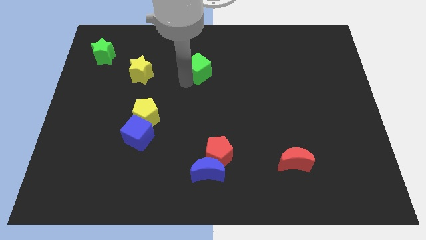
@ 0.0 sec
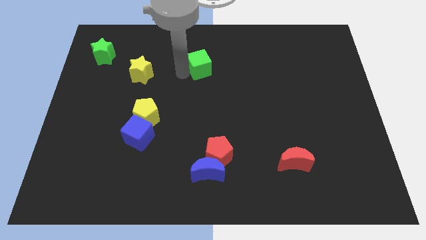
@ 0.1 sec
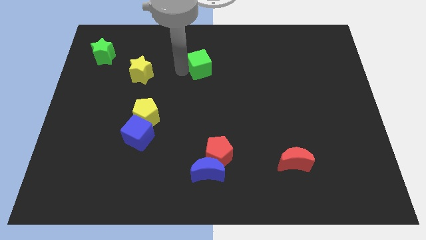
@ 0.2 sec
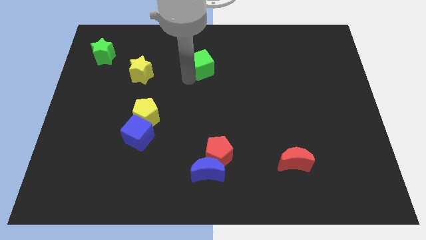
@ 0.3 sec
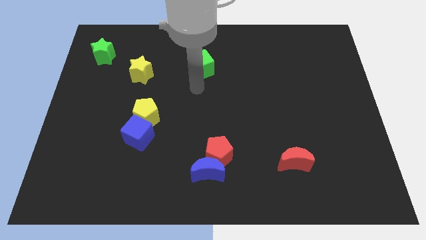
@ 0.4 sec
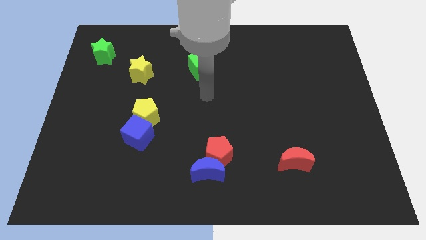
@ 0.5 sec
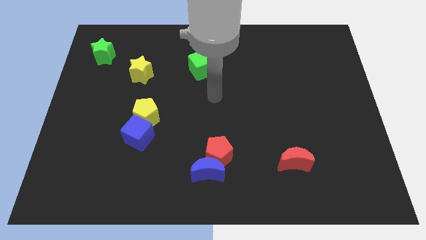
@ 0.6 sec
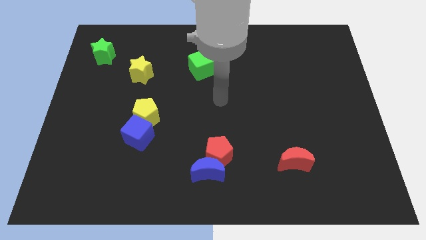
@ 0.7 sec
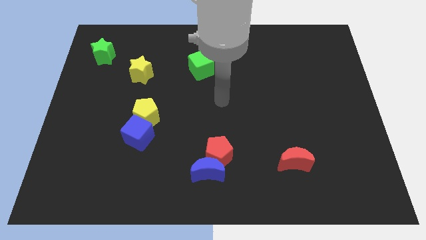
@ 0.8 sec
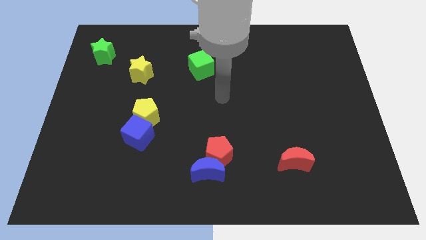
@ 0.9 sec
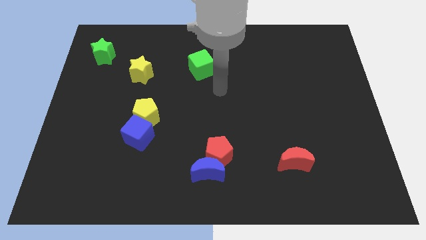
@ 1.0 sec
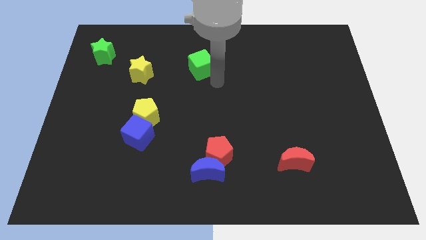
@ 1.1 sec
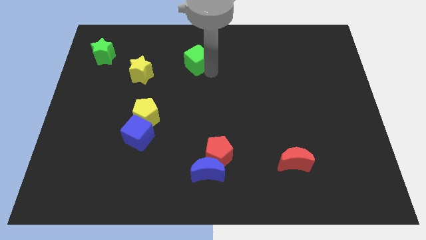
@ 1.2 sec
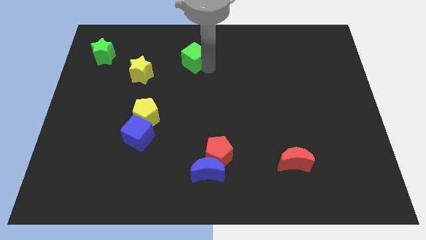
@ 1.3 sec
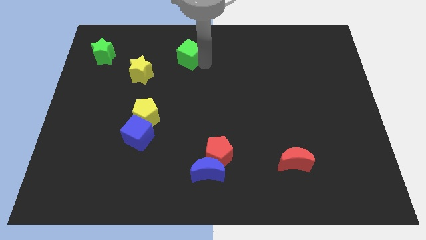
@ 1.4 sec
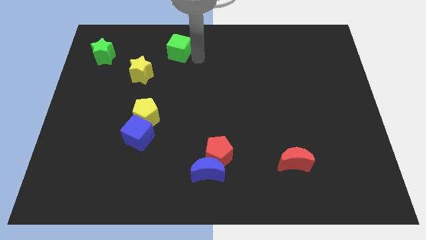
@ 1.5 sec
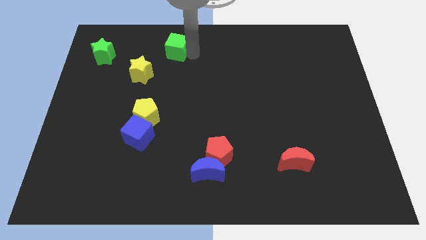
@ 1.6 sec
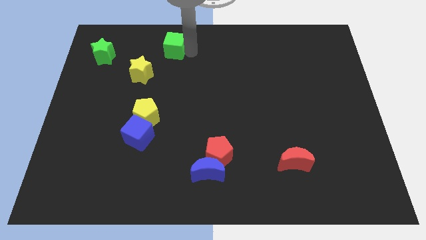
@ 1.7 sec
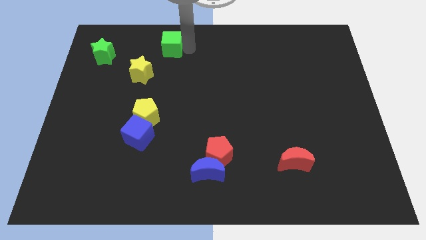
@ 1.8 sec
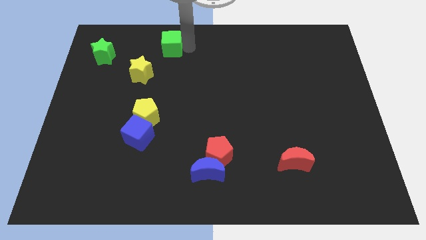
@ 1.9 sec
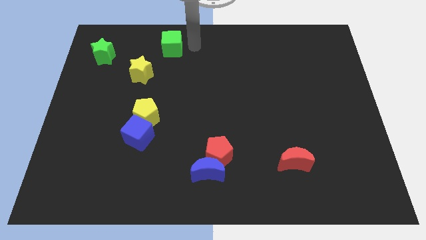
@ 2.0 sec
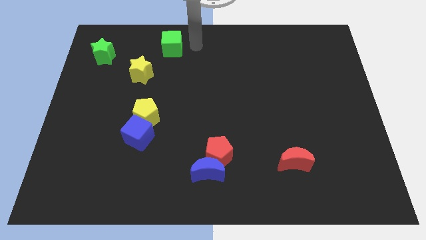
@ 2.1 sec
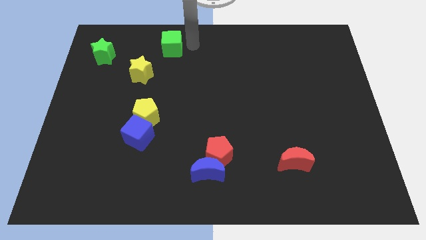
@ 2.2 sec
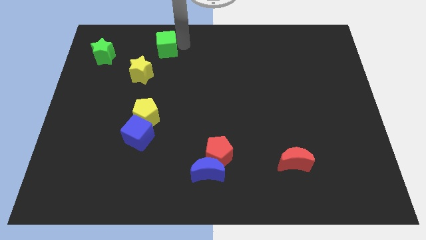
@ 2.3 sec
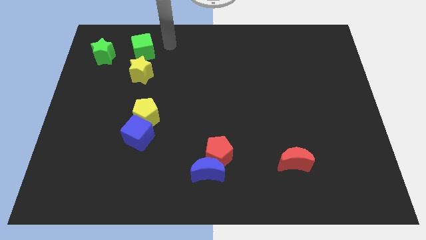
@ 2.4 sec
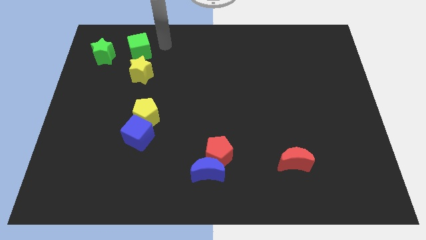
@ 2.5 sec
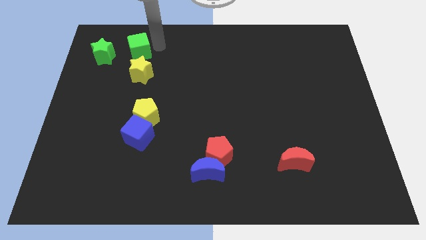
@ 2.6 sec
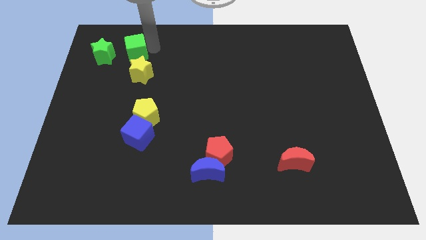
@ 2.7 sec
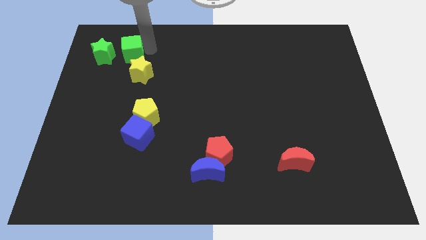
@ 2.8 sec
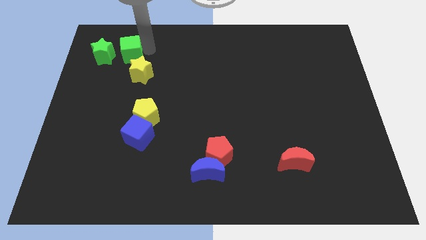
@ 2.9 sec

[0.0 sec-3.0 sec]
move the green cube to the right side of the green star

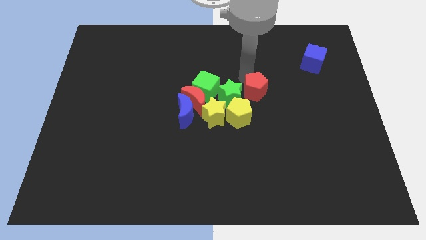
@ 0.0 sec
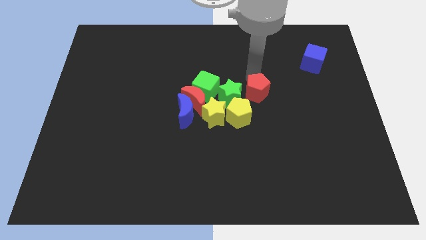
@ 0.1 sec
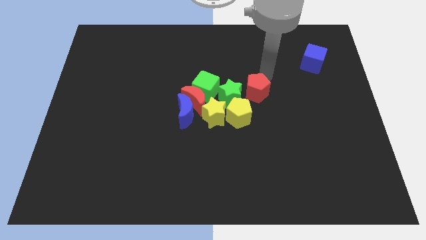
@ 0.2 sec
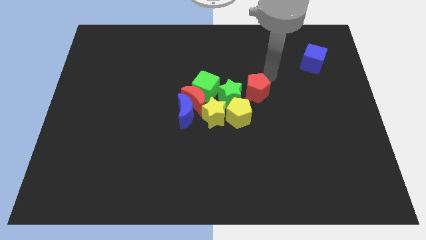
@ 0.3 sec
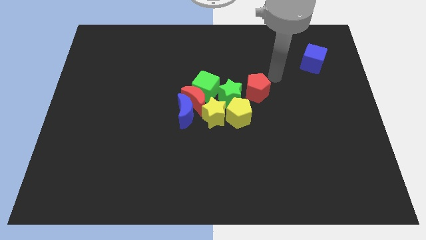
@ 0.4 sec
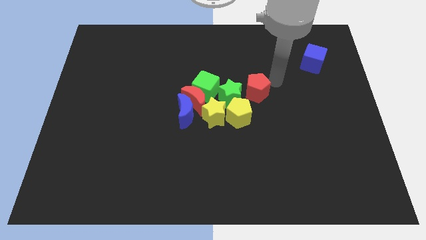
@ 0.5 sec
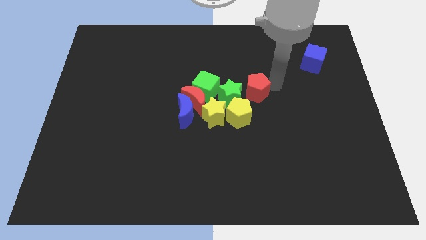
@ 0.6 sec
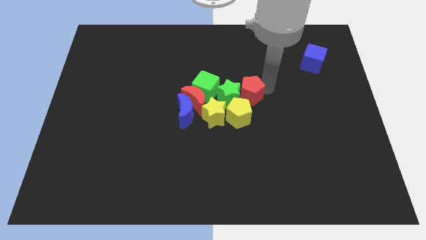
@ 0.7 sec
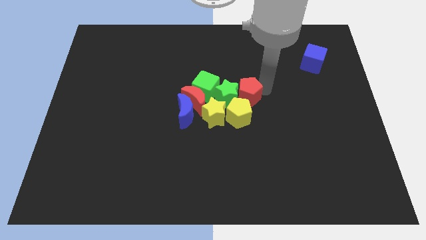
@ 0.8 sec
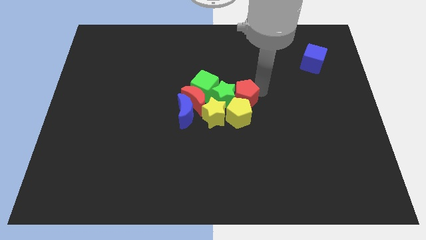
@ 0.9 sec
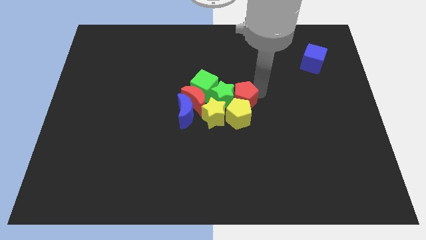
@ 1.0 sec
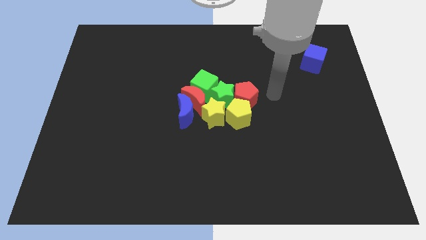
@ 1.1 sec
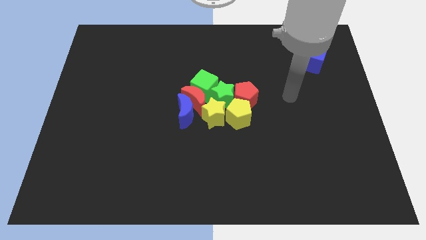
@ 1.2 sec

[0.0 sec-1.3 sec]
put the red pentagon at the top of the yellow pentagon

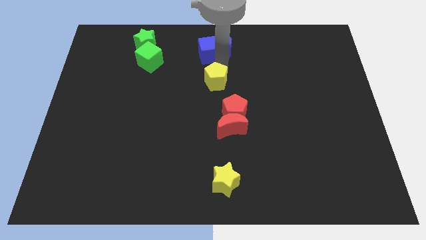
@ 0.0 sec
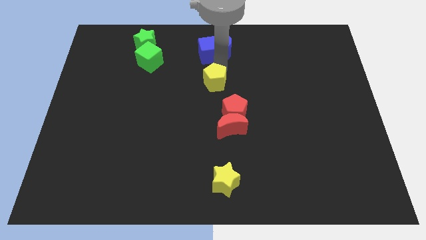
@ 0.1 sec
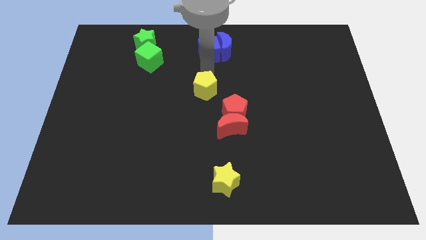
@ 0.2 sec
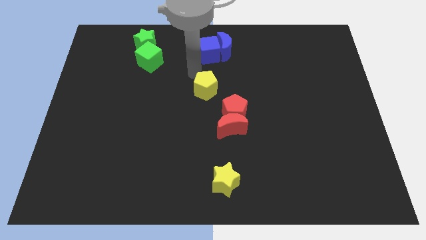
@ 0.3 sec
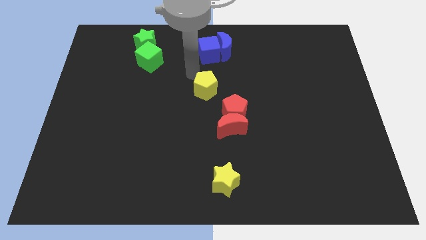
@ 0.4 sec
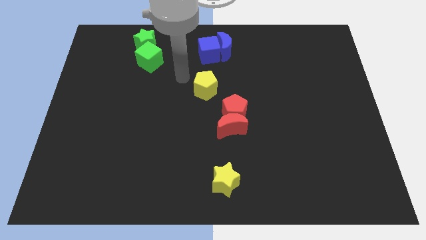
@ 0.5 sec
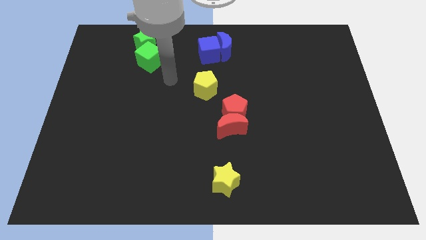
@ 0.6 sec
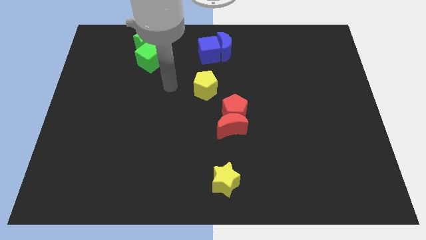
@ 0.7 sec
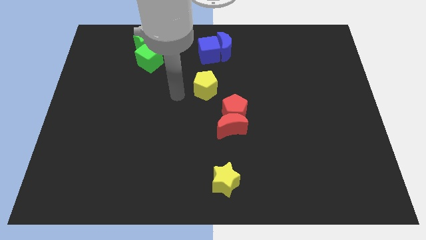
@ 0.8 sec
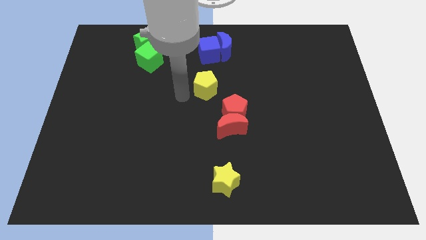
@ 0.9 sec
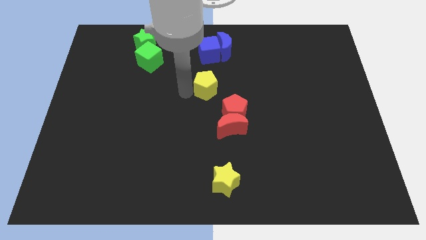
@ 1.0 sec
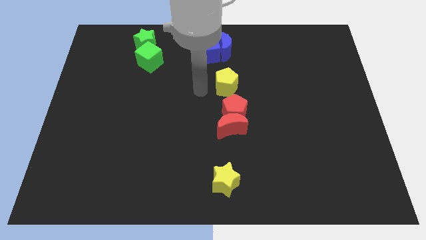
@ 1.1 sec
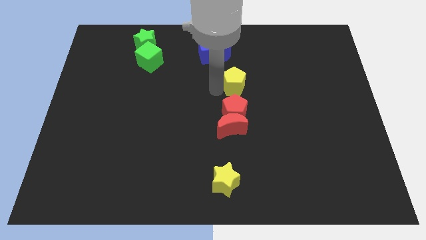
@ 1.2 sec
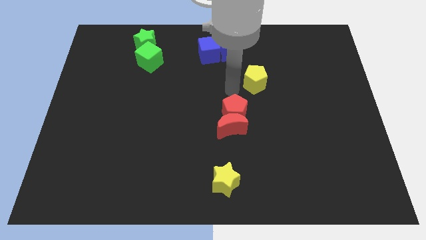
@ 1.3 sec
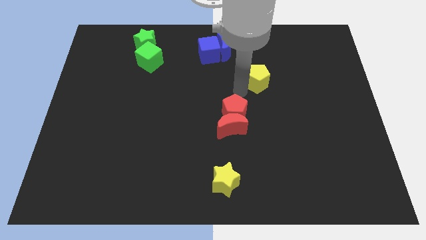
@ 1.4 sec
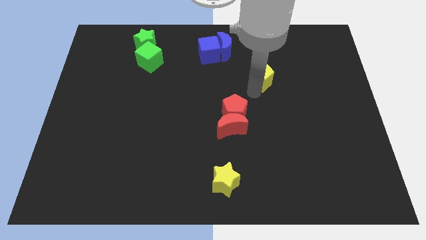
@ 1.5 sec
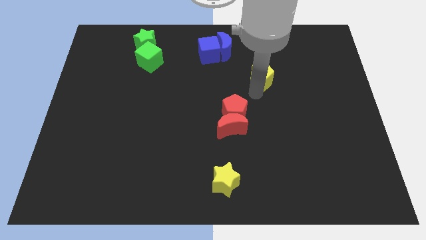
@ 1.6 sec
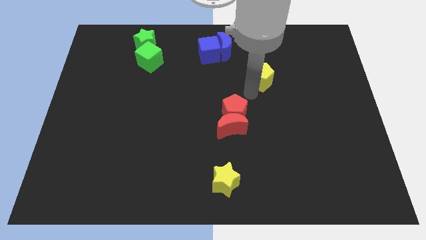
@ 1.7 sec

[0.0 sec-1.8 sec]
put the yellow pentagon diagonally top right to red pentagon

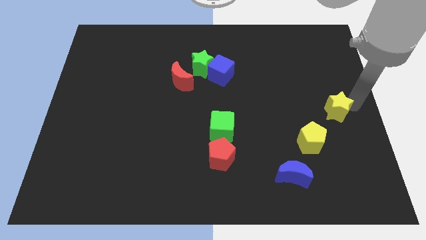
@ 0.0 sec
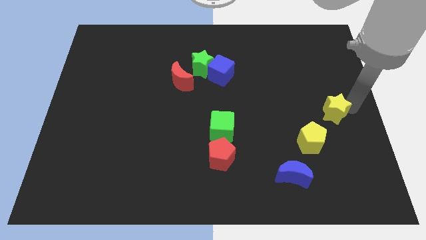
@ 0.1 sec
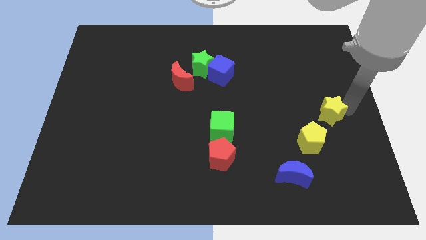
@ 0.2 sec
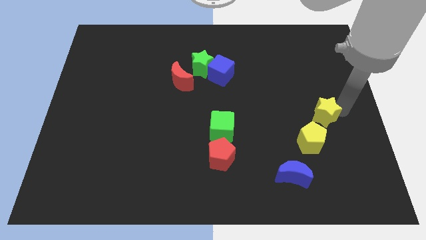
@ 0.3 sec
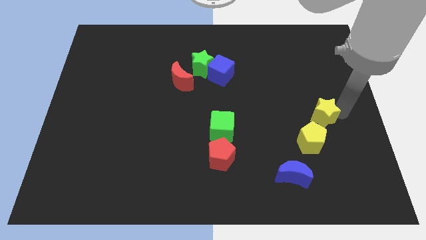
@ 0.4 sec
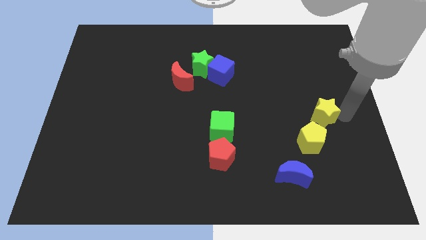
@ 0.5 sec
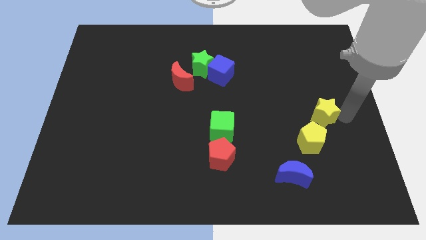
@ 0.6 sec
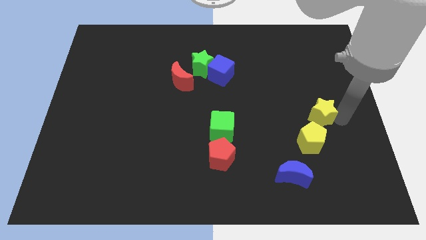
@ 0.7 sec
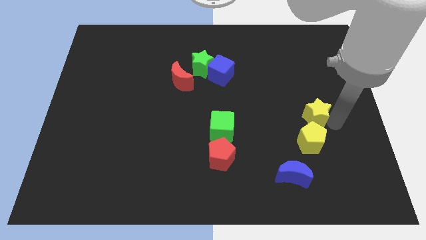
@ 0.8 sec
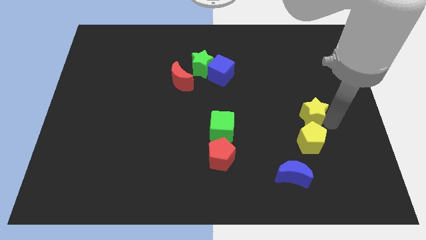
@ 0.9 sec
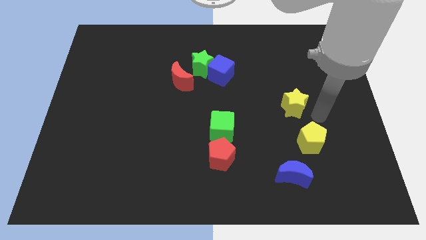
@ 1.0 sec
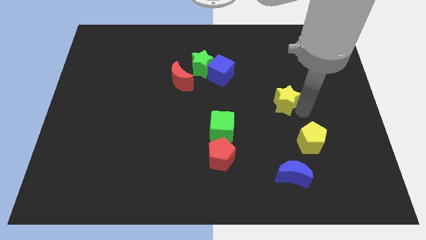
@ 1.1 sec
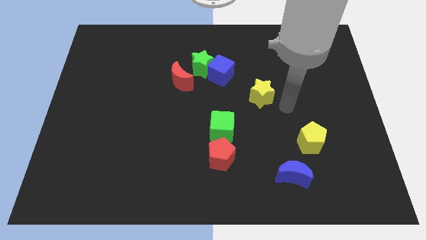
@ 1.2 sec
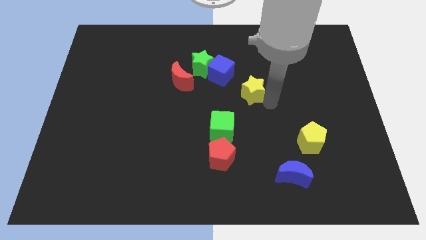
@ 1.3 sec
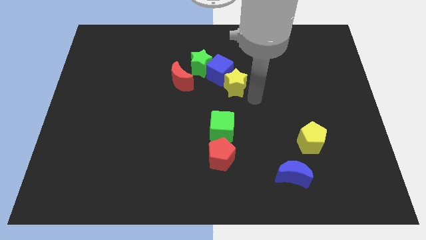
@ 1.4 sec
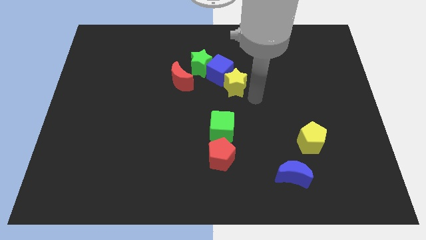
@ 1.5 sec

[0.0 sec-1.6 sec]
move the yellow star into the blue cube

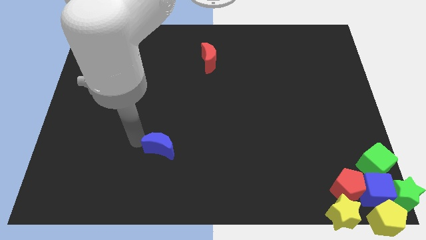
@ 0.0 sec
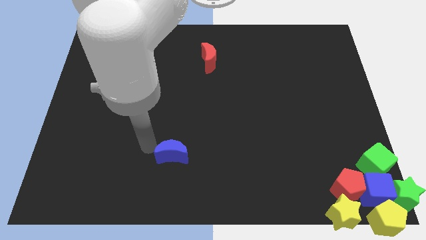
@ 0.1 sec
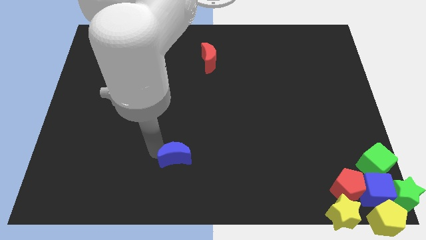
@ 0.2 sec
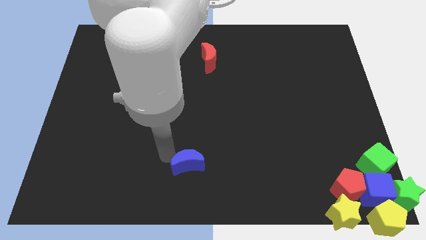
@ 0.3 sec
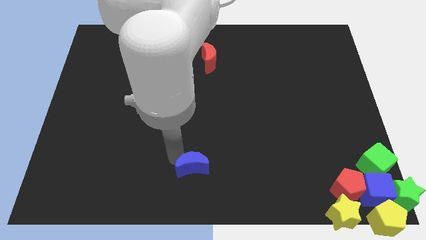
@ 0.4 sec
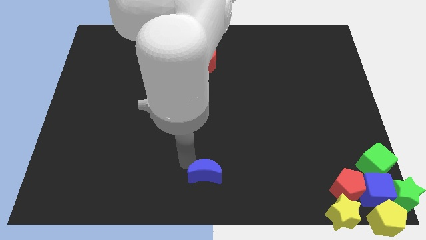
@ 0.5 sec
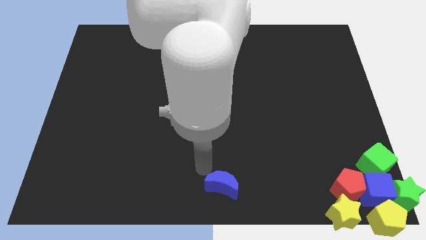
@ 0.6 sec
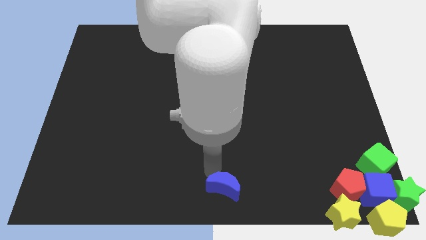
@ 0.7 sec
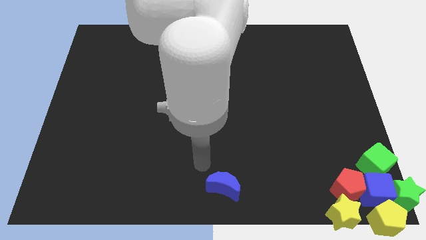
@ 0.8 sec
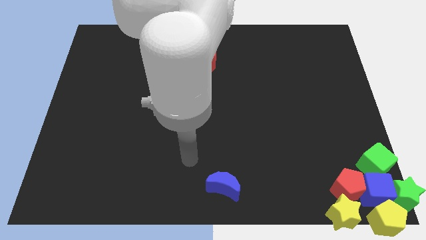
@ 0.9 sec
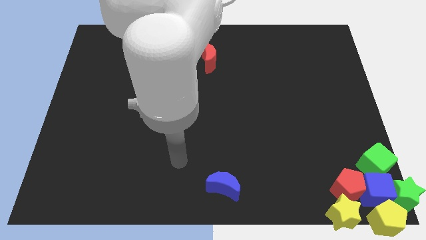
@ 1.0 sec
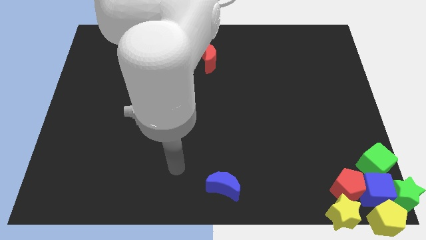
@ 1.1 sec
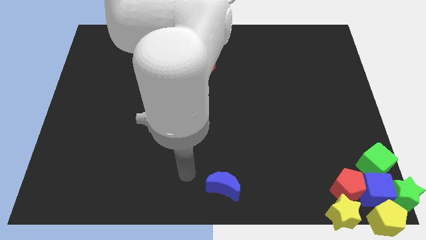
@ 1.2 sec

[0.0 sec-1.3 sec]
push the blue crescent to the bottom center of the board
